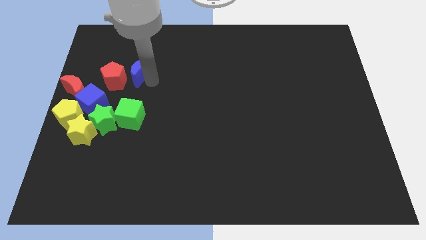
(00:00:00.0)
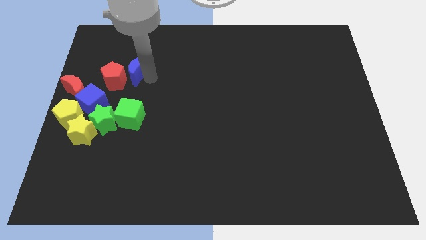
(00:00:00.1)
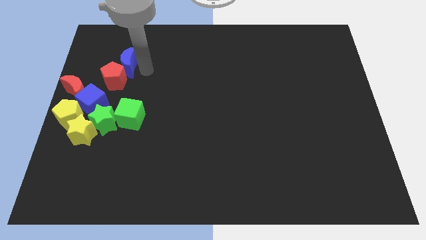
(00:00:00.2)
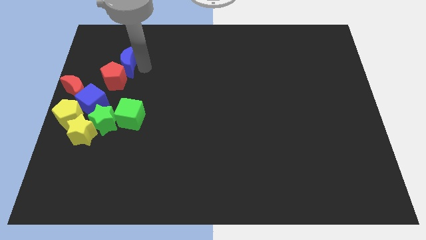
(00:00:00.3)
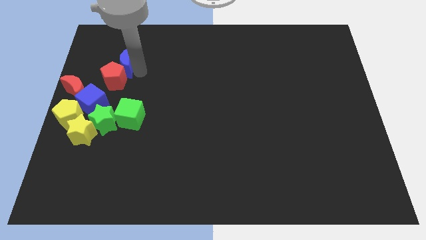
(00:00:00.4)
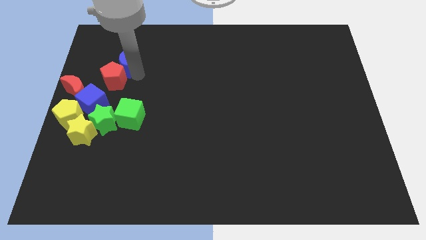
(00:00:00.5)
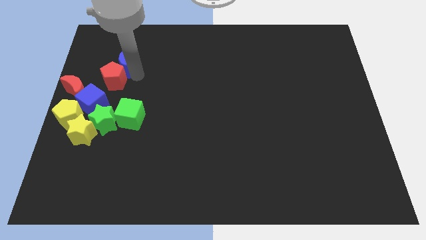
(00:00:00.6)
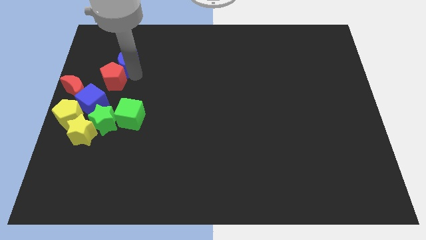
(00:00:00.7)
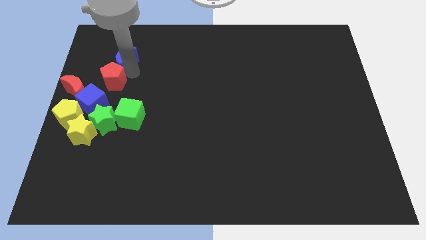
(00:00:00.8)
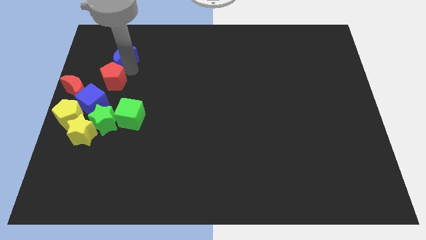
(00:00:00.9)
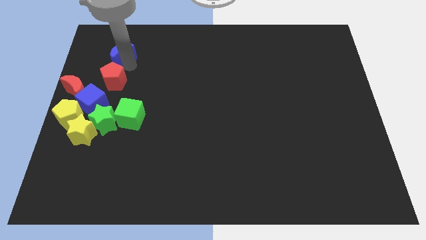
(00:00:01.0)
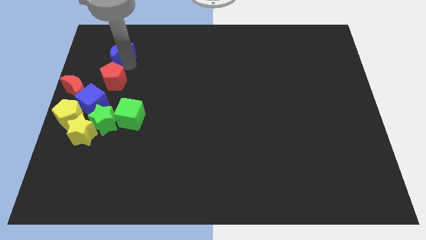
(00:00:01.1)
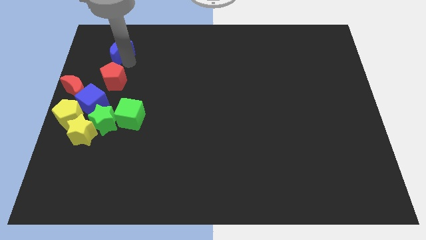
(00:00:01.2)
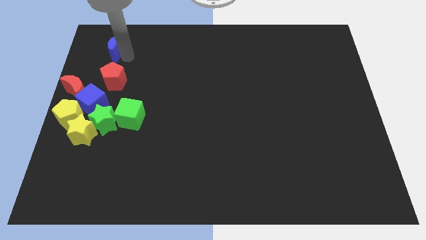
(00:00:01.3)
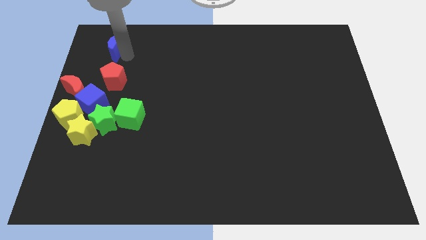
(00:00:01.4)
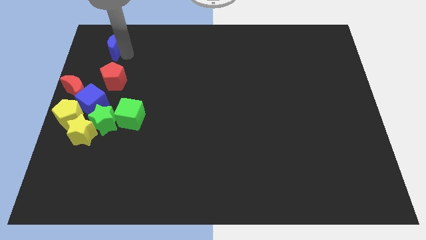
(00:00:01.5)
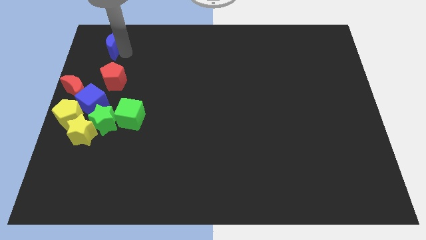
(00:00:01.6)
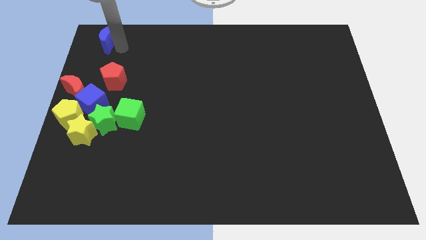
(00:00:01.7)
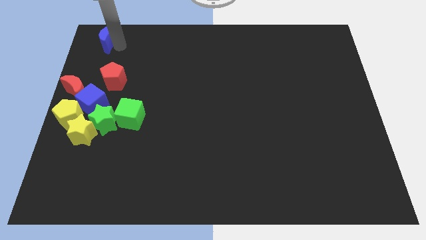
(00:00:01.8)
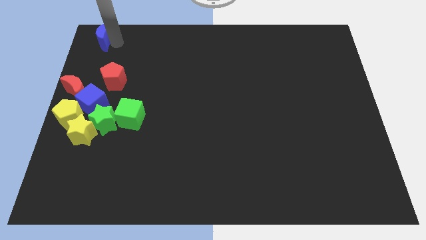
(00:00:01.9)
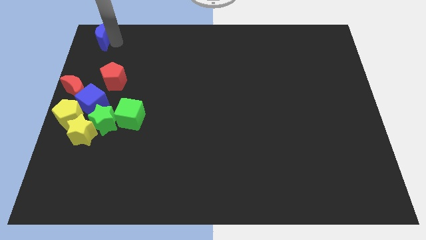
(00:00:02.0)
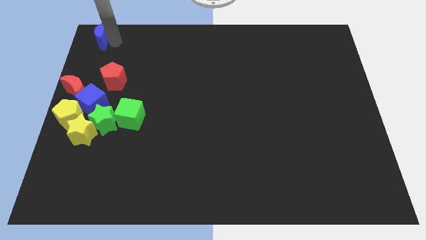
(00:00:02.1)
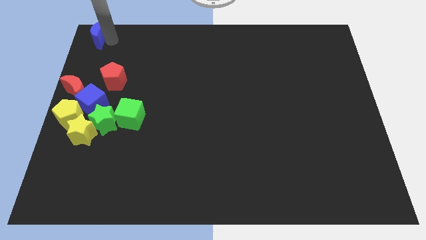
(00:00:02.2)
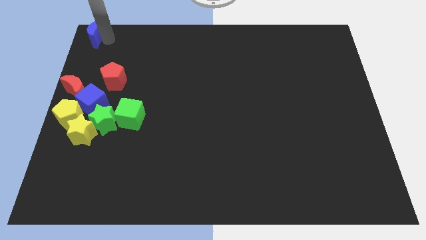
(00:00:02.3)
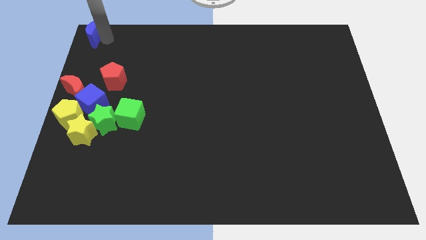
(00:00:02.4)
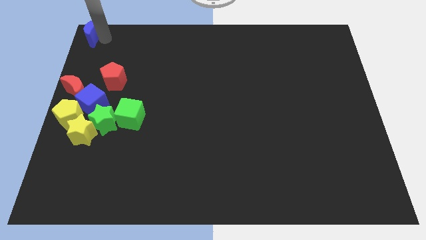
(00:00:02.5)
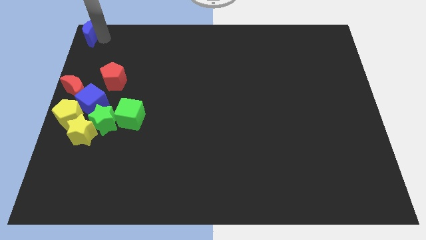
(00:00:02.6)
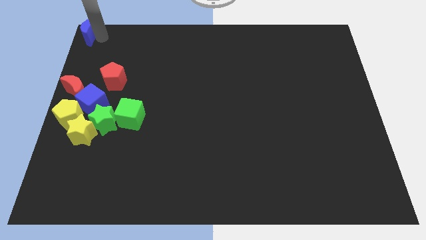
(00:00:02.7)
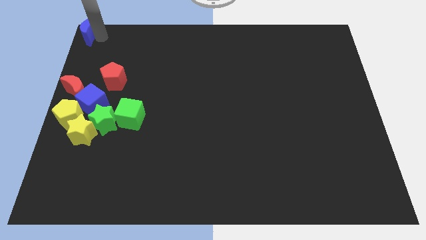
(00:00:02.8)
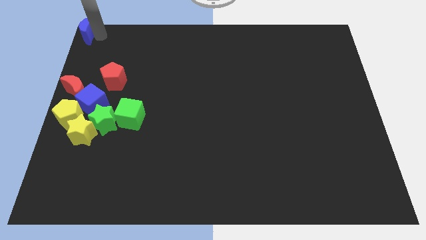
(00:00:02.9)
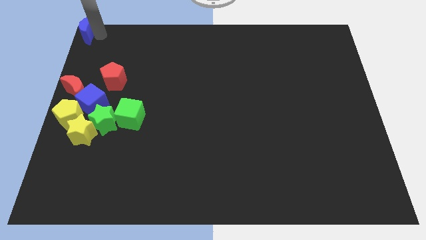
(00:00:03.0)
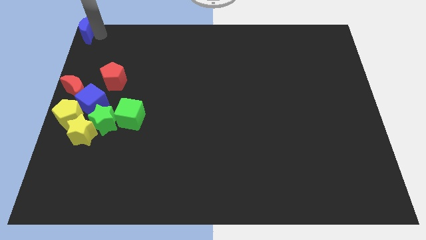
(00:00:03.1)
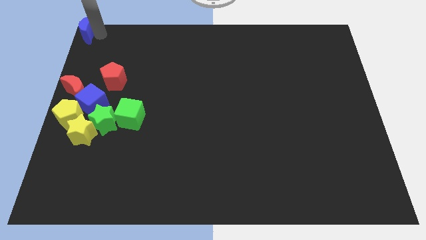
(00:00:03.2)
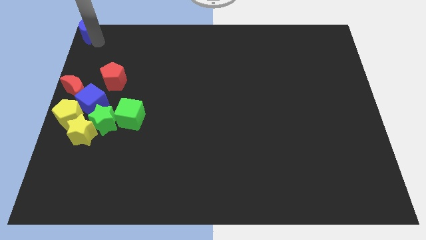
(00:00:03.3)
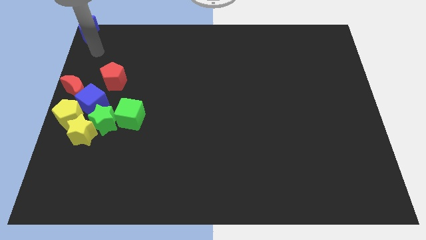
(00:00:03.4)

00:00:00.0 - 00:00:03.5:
push the blue crescent to the top left corner of the table

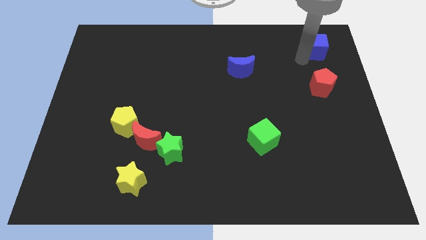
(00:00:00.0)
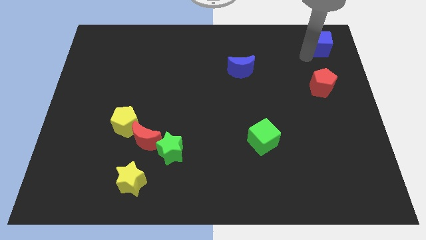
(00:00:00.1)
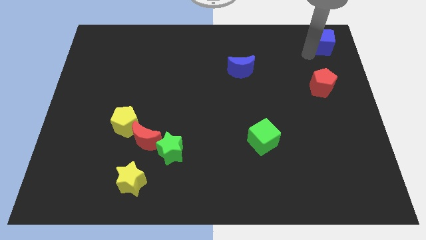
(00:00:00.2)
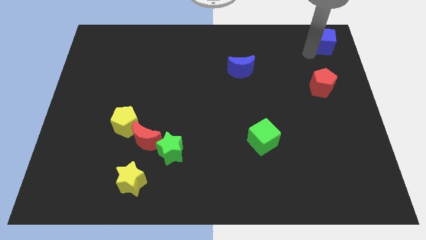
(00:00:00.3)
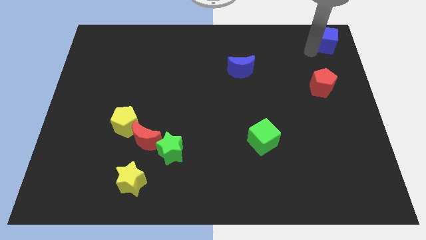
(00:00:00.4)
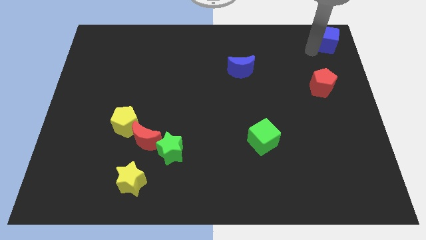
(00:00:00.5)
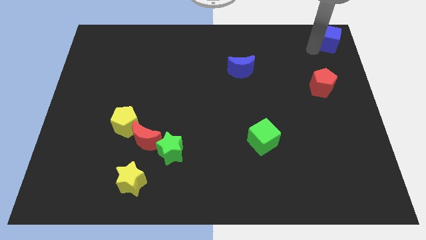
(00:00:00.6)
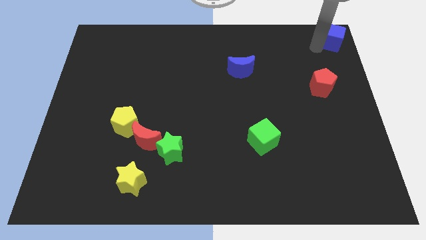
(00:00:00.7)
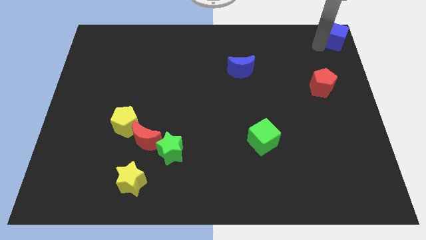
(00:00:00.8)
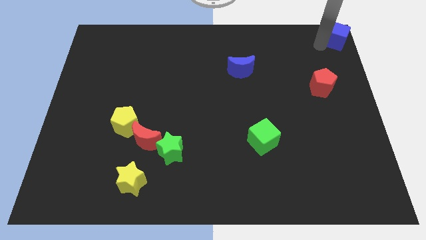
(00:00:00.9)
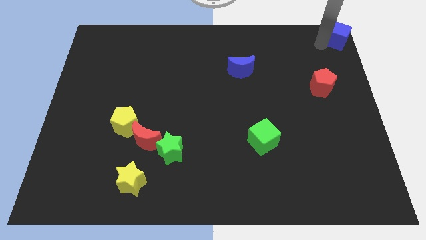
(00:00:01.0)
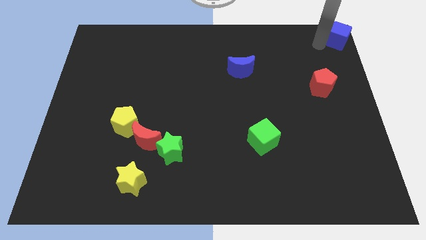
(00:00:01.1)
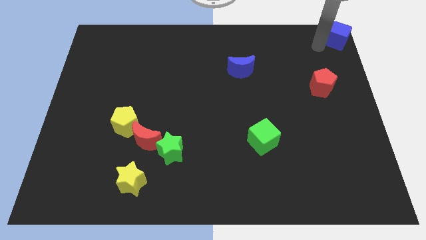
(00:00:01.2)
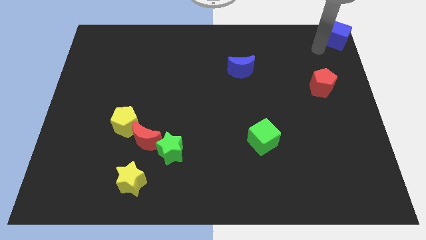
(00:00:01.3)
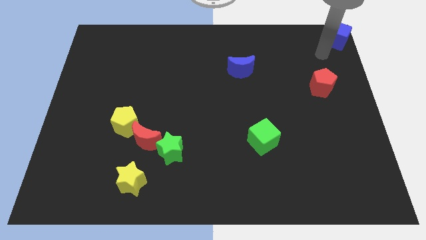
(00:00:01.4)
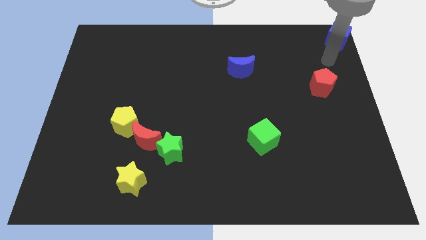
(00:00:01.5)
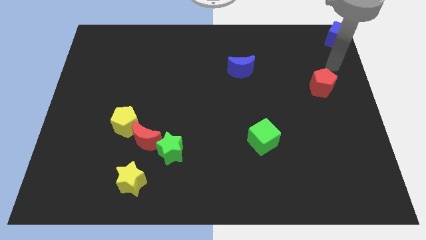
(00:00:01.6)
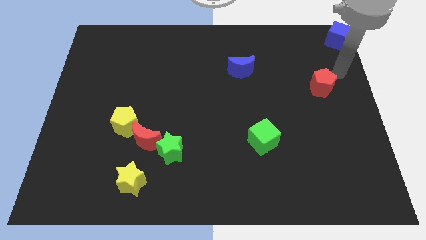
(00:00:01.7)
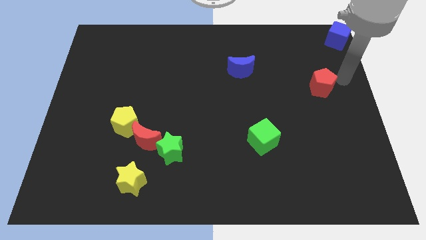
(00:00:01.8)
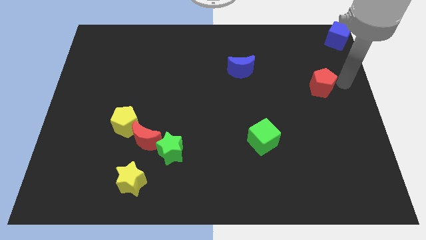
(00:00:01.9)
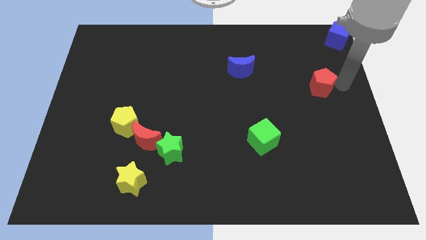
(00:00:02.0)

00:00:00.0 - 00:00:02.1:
slide the blue cube at the top right corner

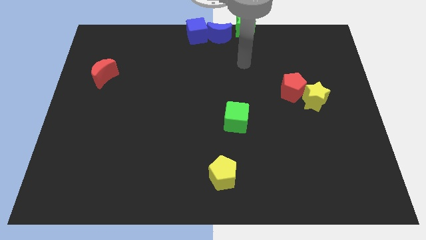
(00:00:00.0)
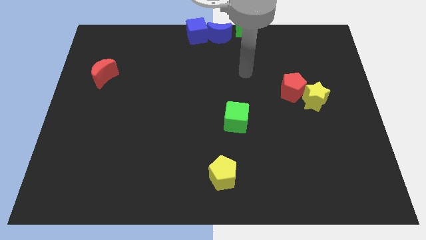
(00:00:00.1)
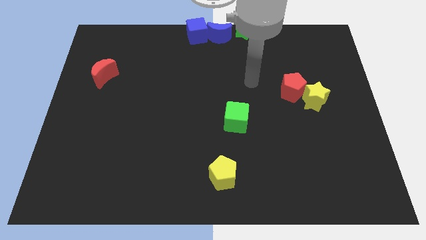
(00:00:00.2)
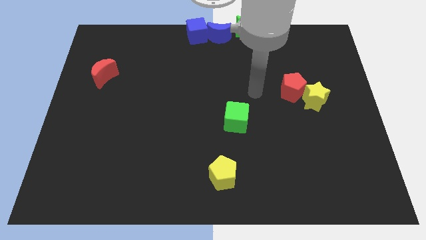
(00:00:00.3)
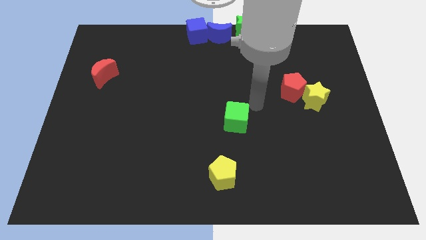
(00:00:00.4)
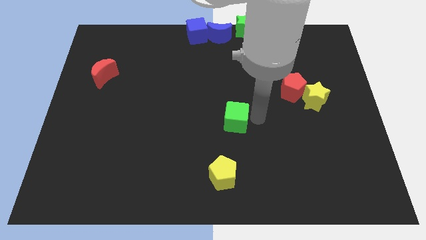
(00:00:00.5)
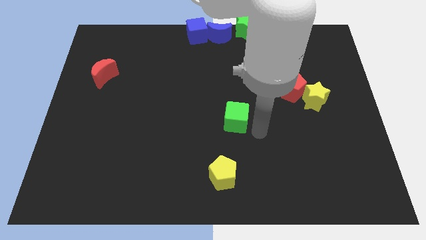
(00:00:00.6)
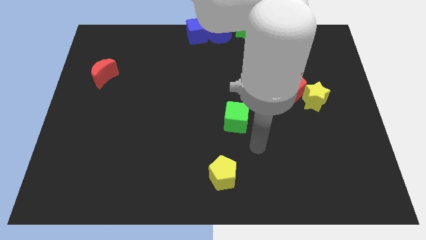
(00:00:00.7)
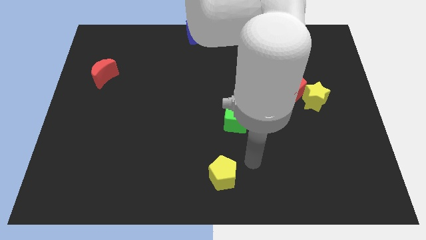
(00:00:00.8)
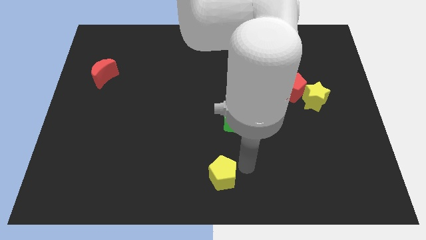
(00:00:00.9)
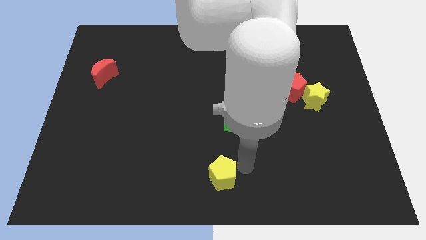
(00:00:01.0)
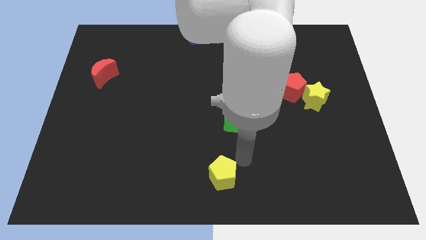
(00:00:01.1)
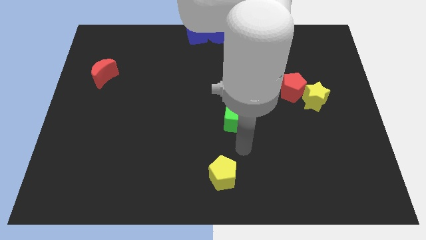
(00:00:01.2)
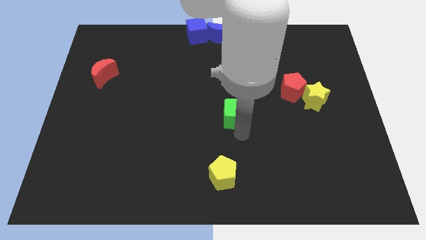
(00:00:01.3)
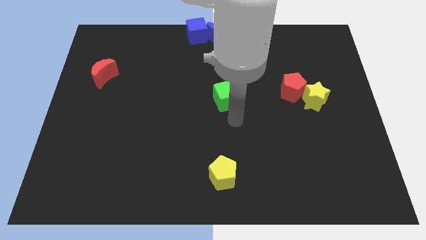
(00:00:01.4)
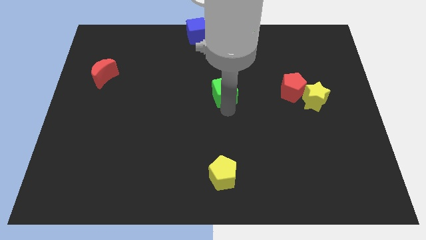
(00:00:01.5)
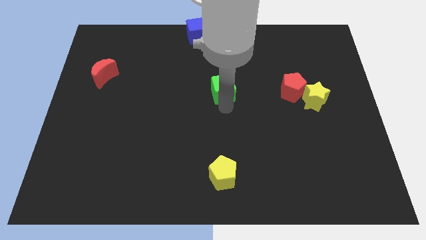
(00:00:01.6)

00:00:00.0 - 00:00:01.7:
push the green cube closer to the blue moon

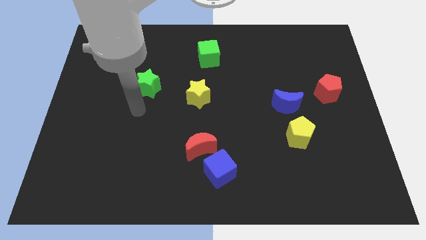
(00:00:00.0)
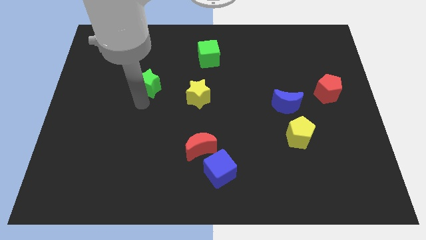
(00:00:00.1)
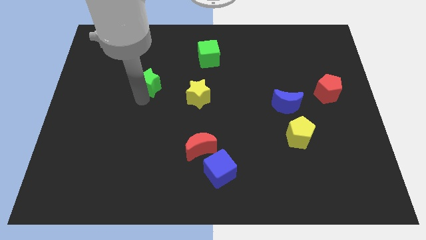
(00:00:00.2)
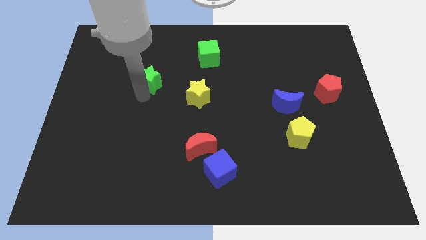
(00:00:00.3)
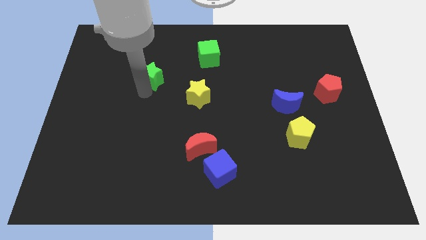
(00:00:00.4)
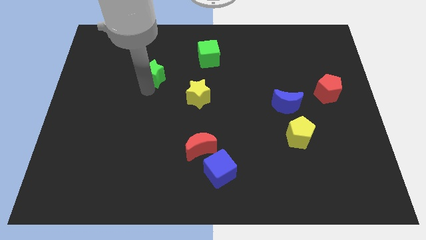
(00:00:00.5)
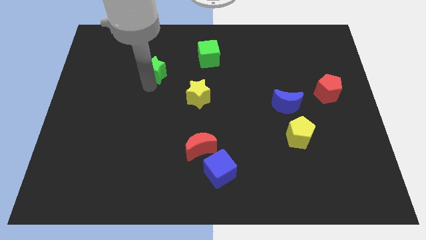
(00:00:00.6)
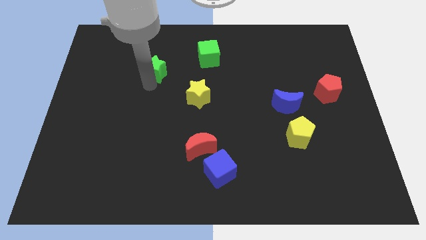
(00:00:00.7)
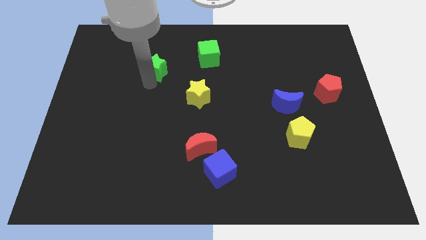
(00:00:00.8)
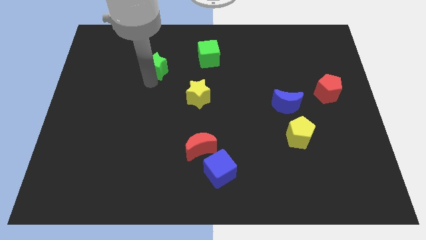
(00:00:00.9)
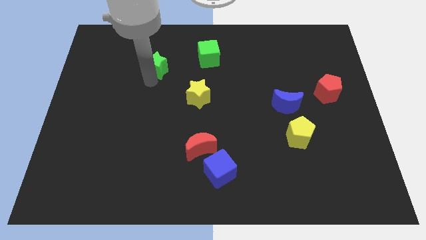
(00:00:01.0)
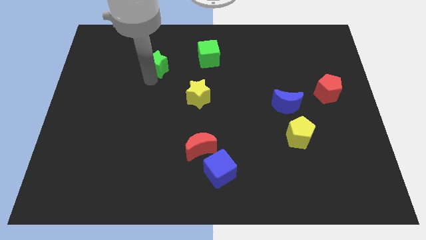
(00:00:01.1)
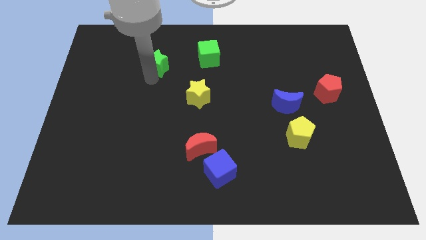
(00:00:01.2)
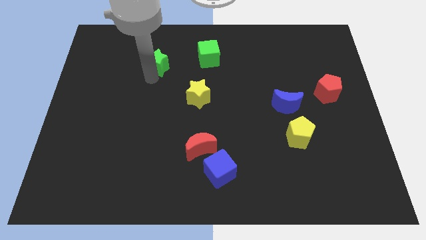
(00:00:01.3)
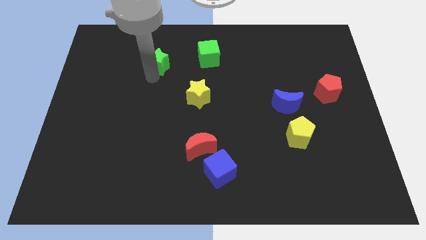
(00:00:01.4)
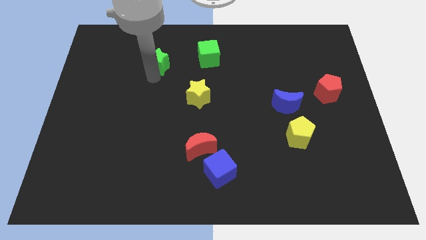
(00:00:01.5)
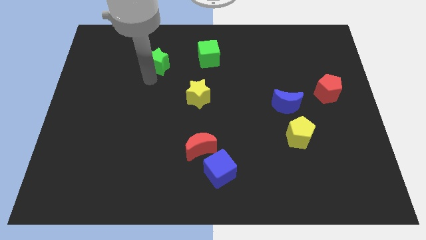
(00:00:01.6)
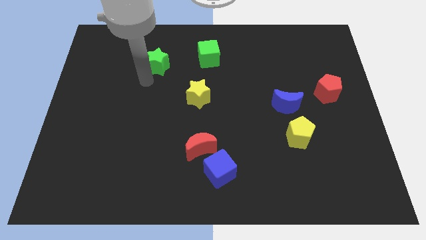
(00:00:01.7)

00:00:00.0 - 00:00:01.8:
push the green star towards the left of the green cube
